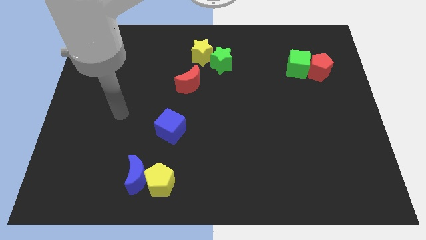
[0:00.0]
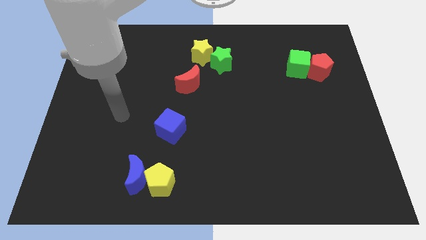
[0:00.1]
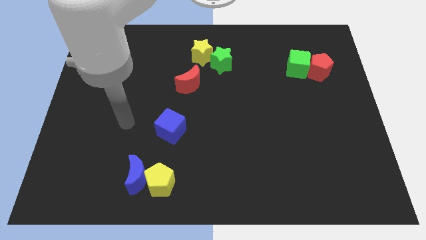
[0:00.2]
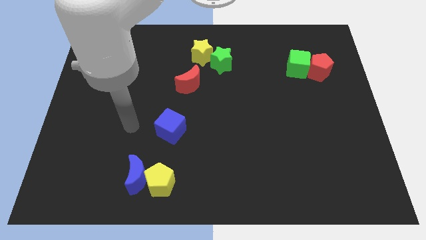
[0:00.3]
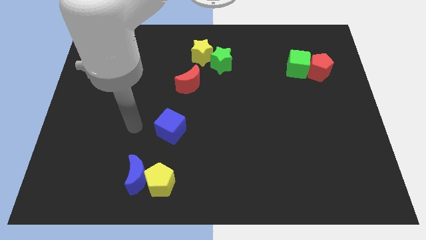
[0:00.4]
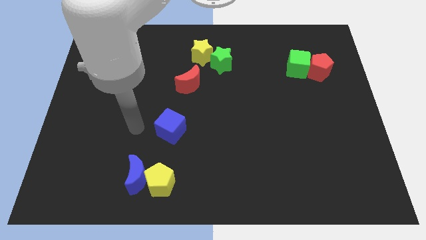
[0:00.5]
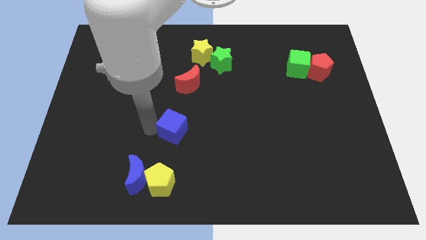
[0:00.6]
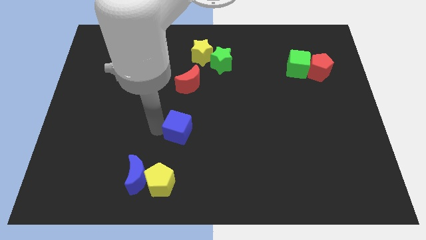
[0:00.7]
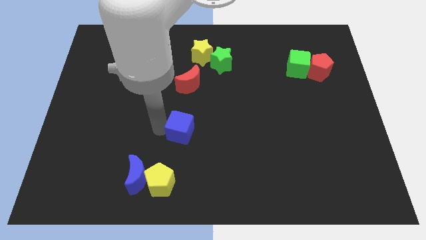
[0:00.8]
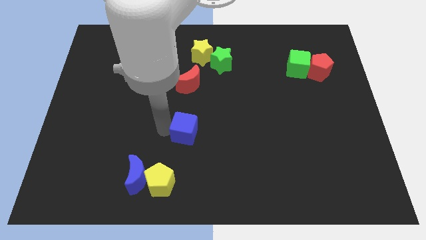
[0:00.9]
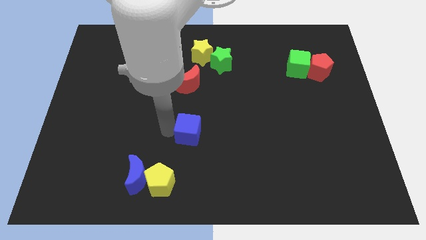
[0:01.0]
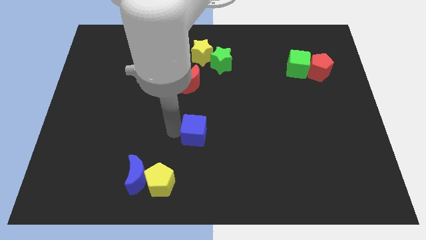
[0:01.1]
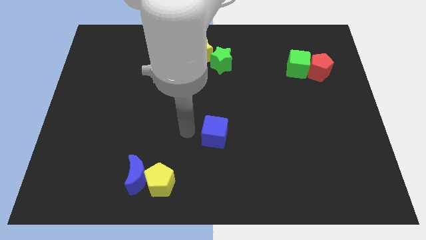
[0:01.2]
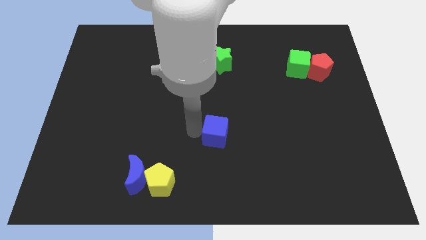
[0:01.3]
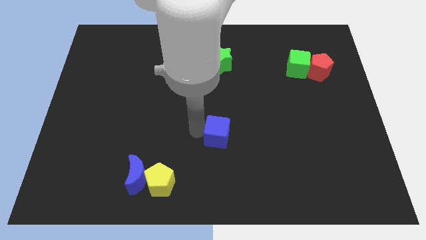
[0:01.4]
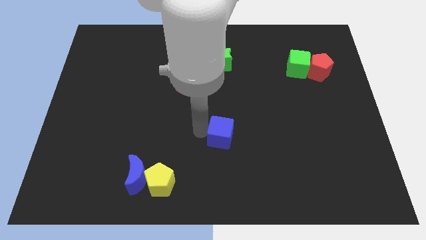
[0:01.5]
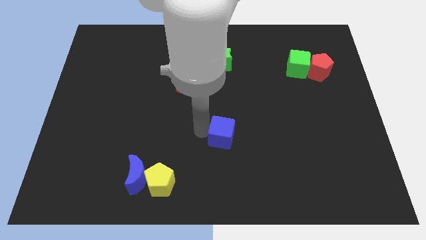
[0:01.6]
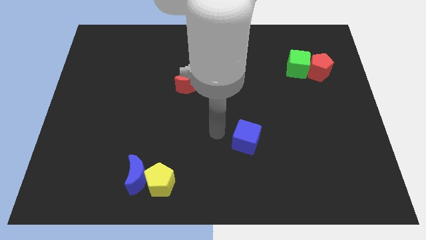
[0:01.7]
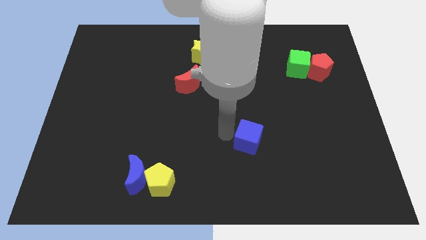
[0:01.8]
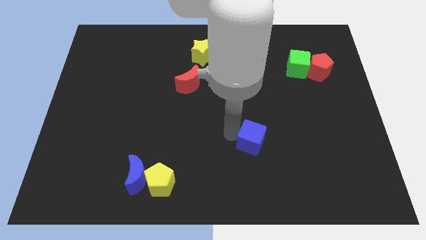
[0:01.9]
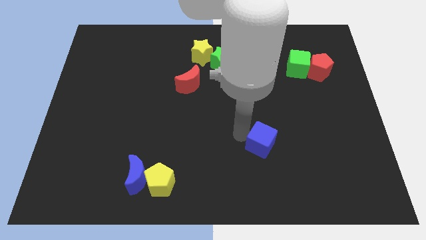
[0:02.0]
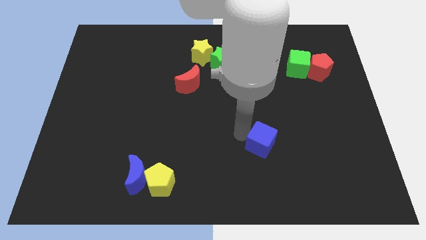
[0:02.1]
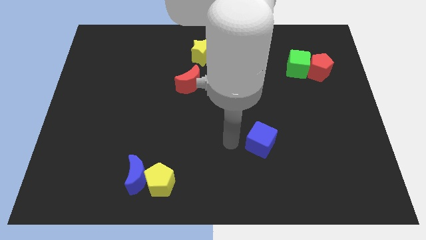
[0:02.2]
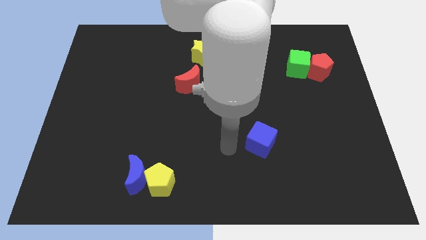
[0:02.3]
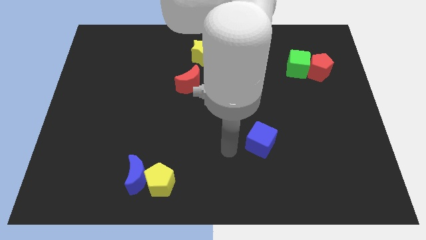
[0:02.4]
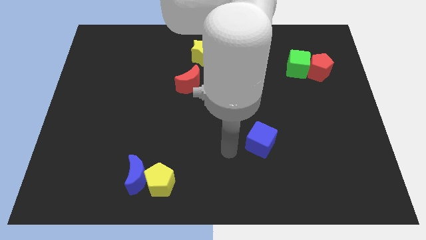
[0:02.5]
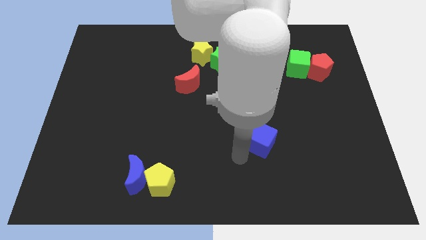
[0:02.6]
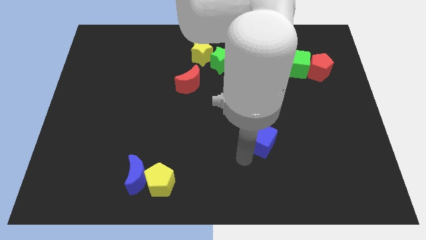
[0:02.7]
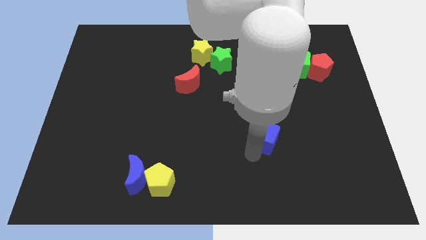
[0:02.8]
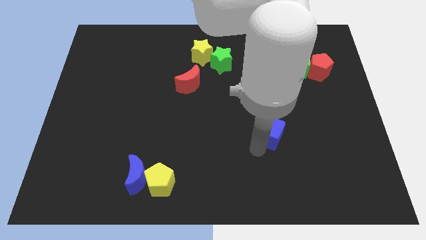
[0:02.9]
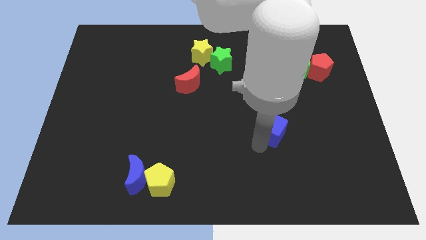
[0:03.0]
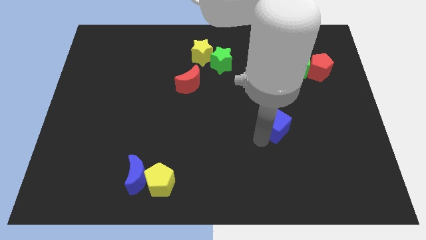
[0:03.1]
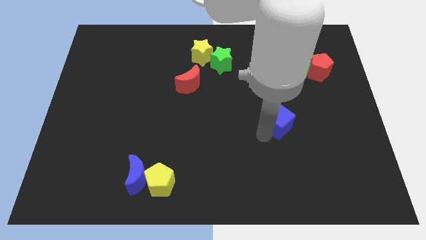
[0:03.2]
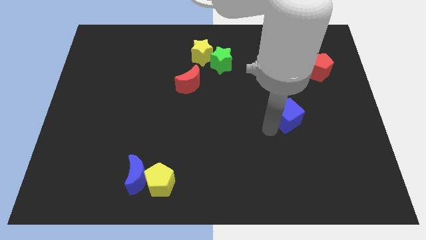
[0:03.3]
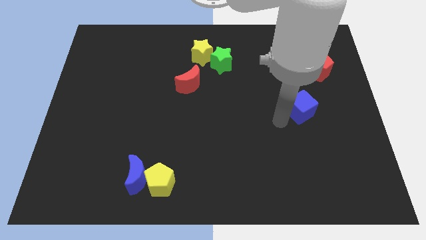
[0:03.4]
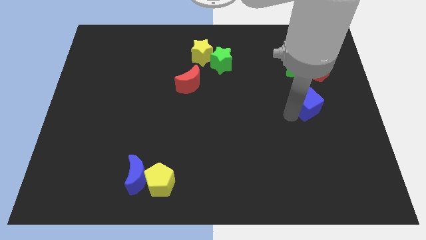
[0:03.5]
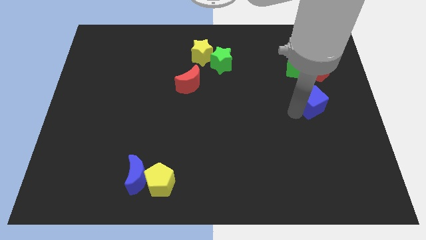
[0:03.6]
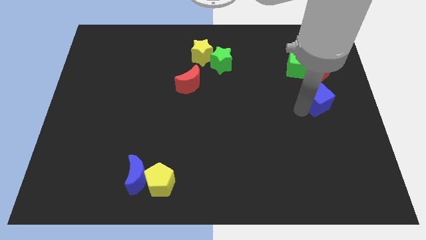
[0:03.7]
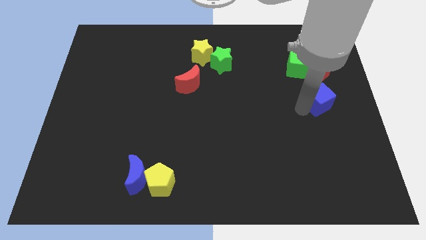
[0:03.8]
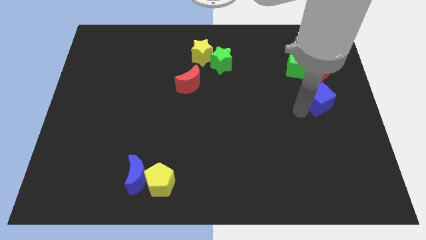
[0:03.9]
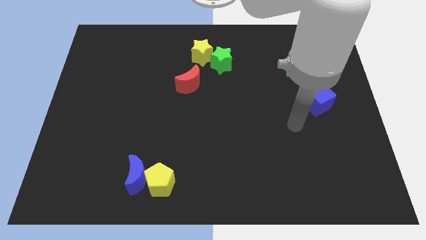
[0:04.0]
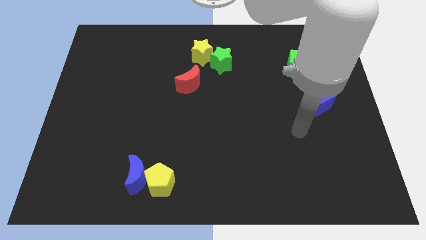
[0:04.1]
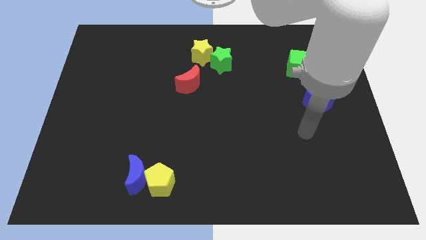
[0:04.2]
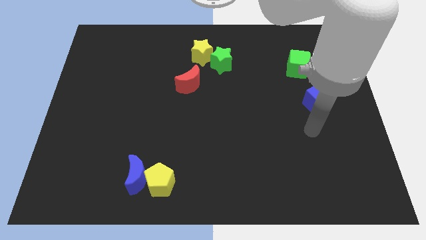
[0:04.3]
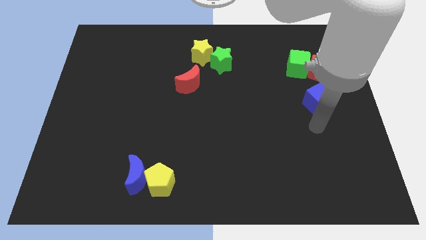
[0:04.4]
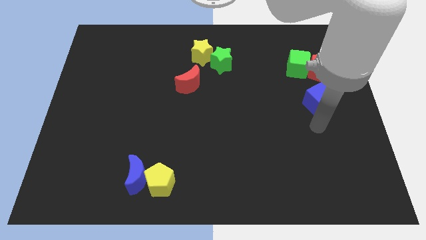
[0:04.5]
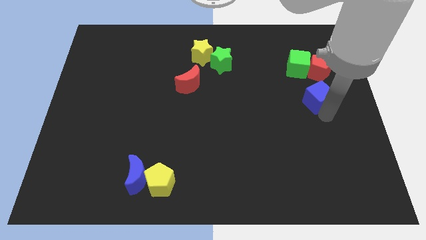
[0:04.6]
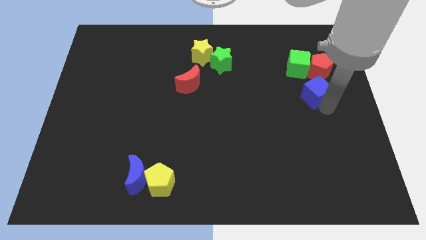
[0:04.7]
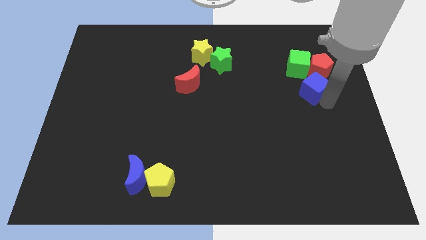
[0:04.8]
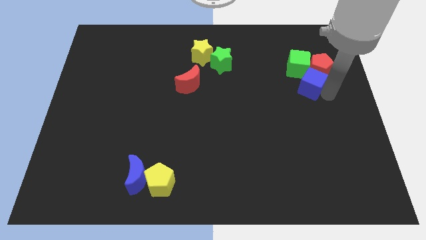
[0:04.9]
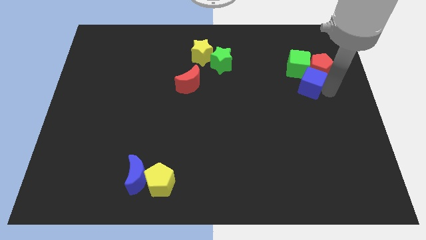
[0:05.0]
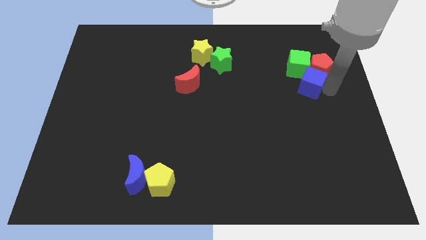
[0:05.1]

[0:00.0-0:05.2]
push the blue cube next to the red pentagon

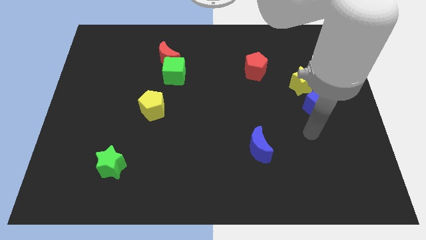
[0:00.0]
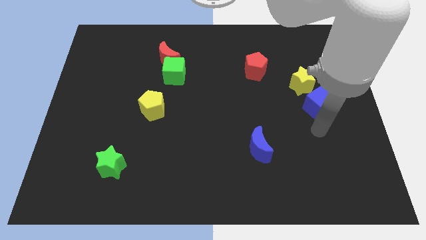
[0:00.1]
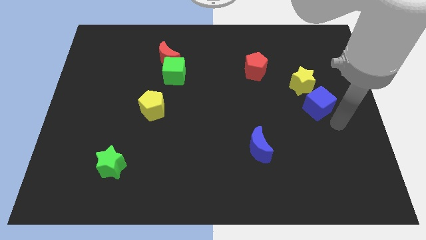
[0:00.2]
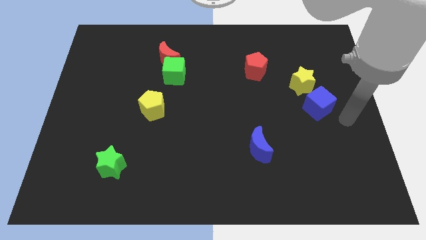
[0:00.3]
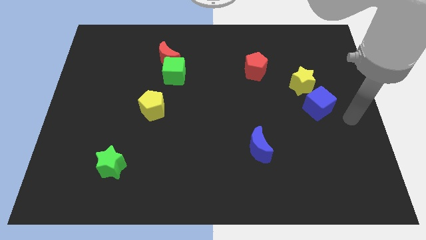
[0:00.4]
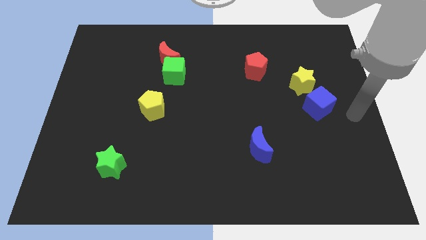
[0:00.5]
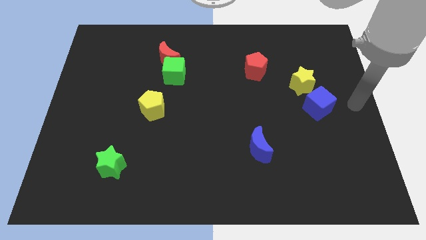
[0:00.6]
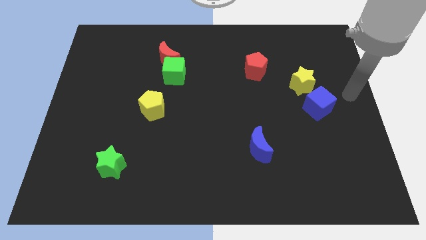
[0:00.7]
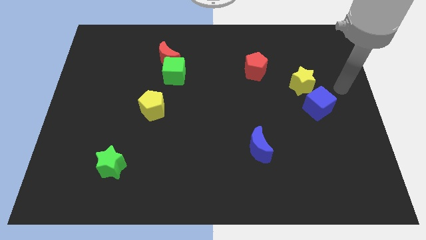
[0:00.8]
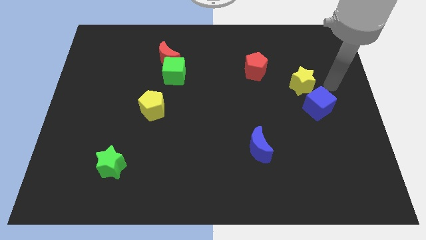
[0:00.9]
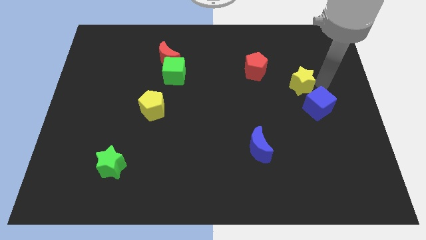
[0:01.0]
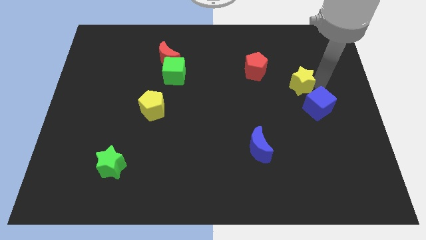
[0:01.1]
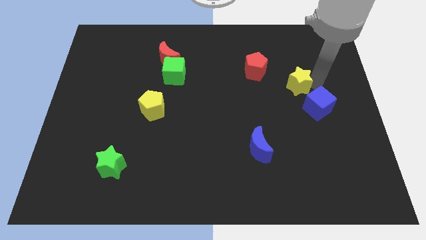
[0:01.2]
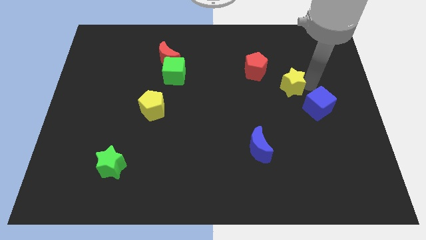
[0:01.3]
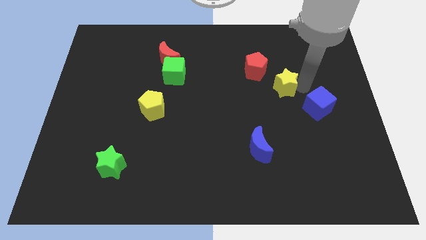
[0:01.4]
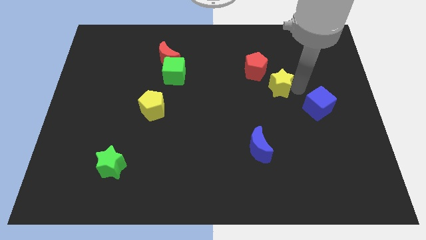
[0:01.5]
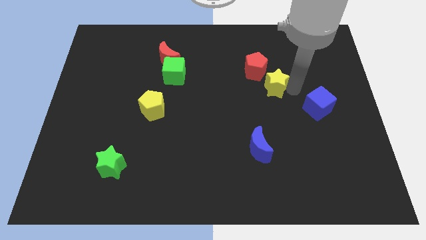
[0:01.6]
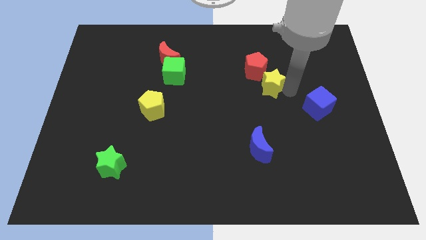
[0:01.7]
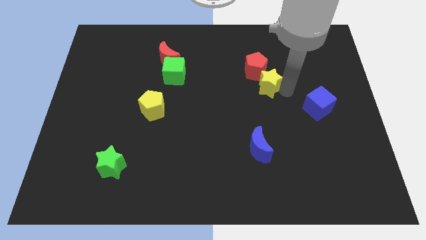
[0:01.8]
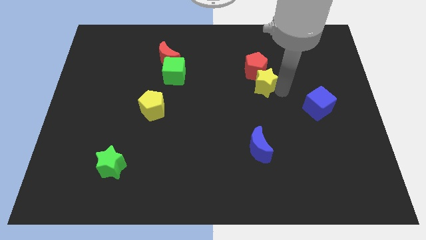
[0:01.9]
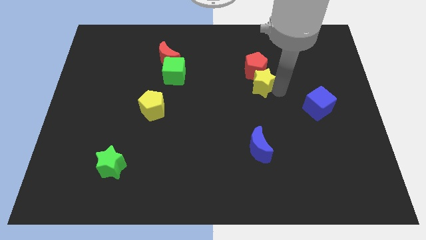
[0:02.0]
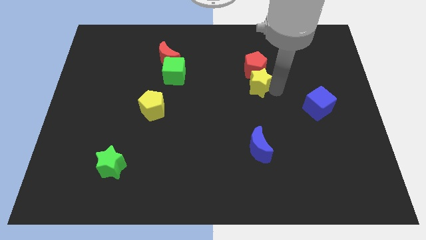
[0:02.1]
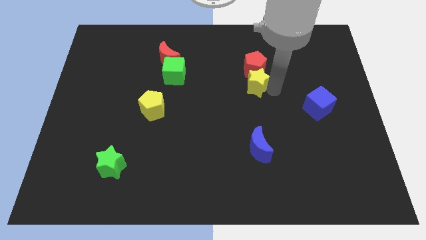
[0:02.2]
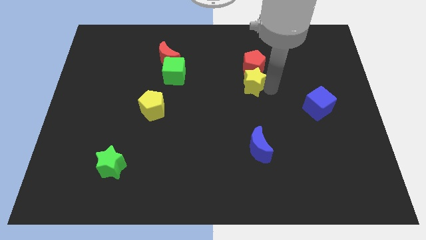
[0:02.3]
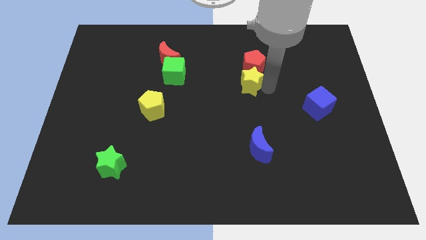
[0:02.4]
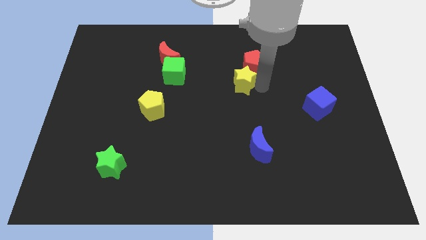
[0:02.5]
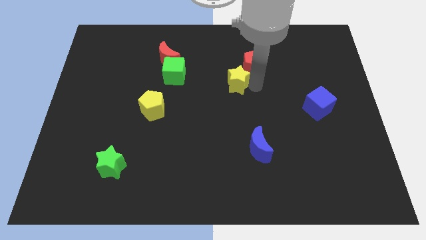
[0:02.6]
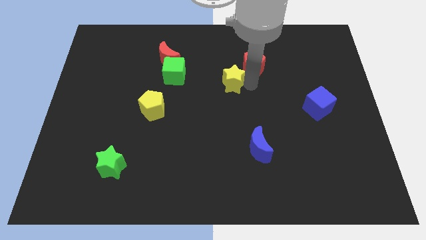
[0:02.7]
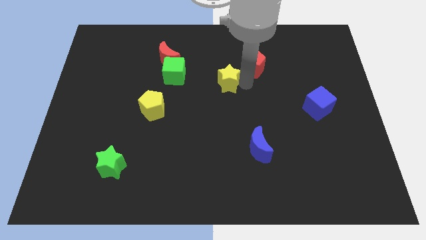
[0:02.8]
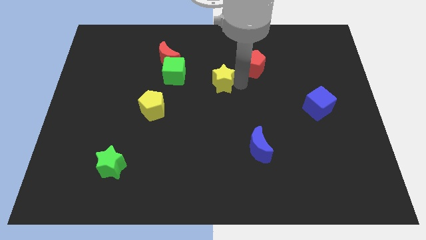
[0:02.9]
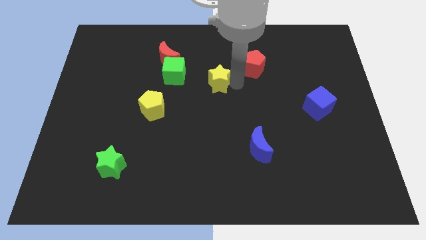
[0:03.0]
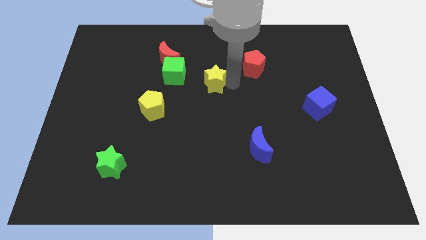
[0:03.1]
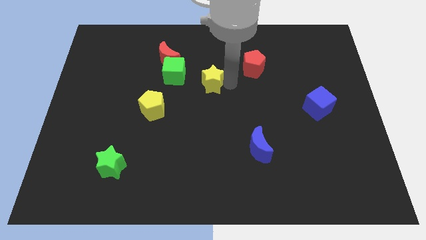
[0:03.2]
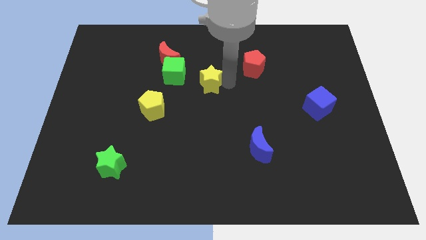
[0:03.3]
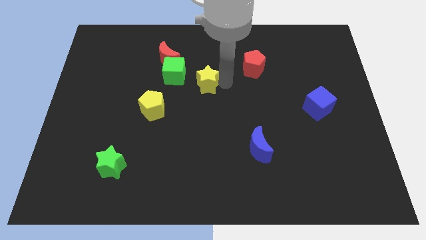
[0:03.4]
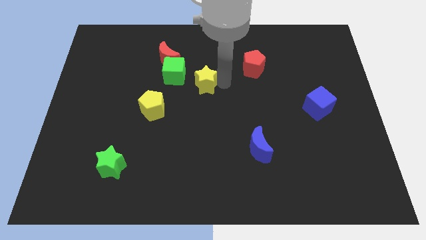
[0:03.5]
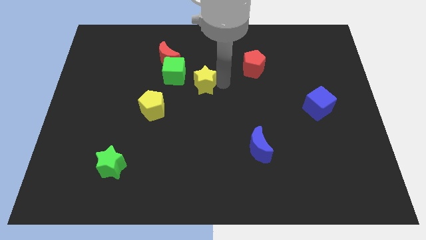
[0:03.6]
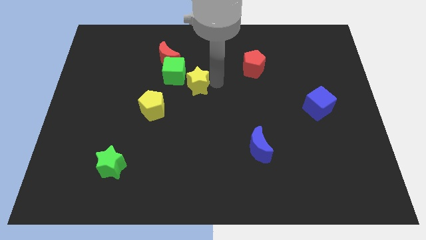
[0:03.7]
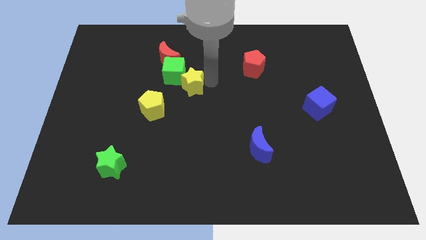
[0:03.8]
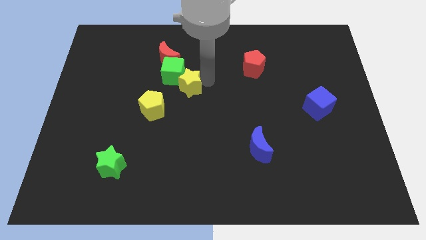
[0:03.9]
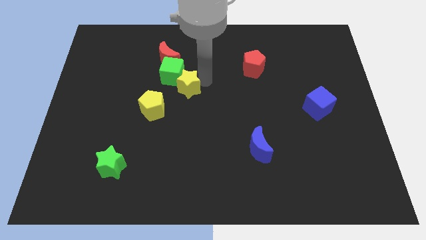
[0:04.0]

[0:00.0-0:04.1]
slide the yellow star towards the green cube
